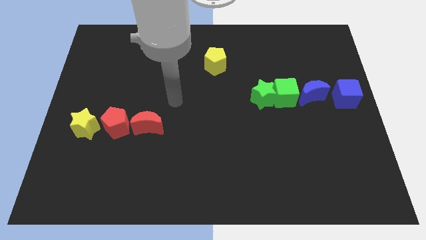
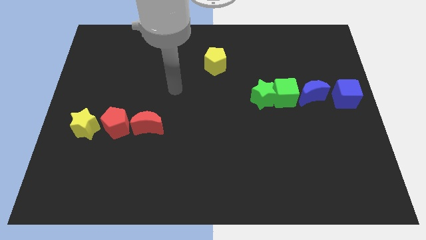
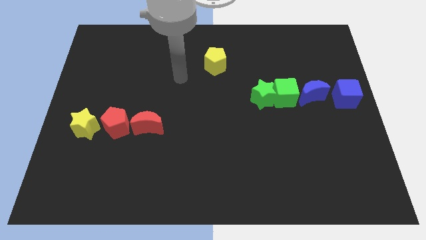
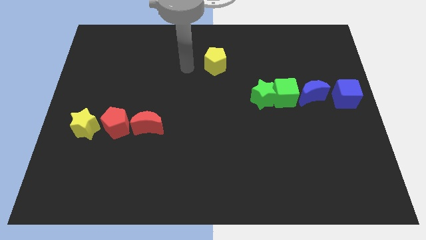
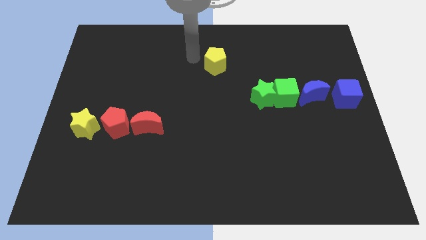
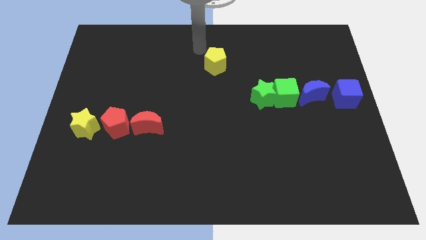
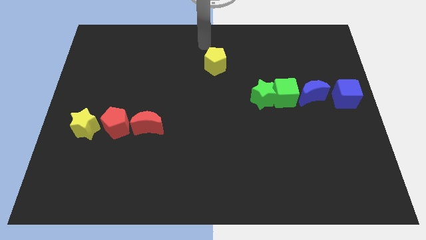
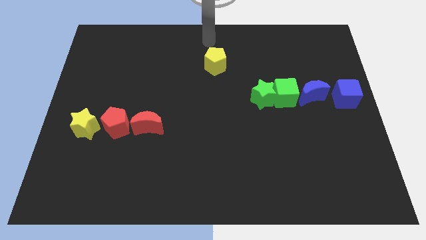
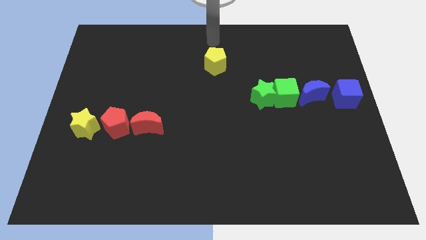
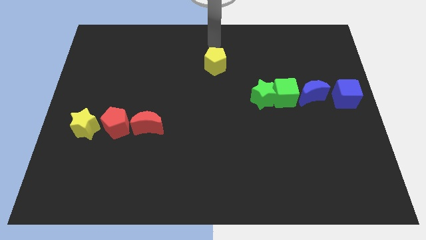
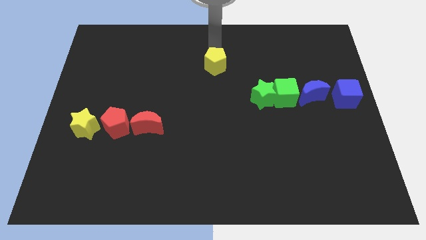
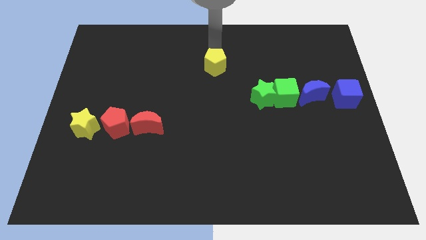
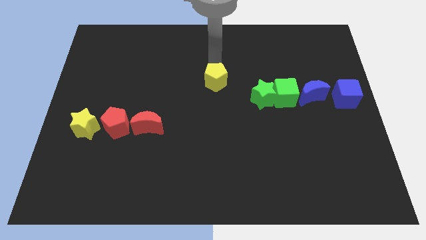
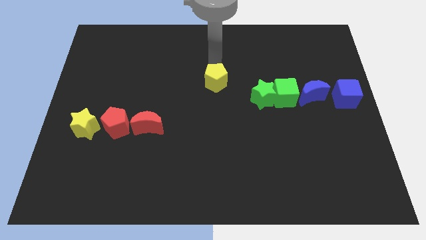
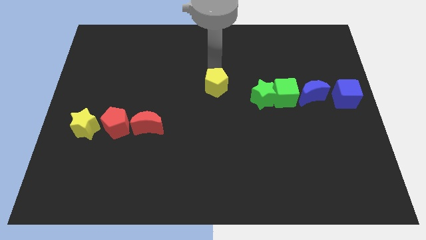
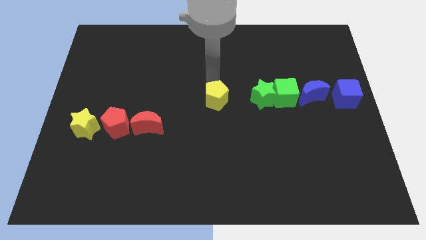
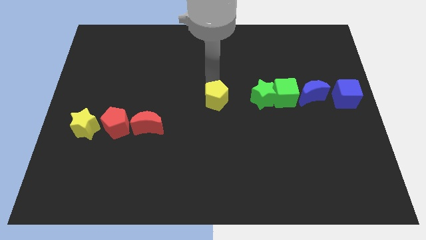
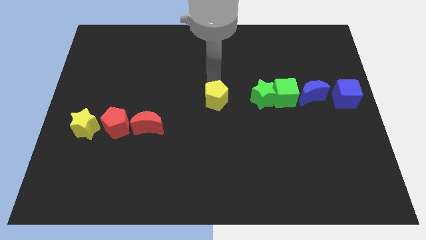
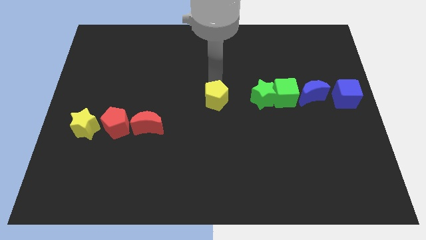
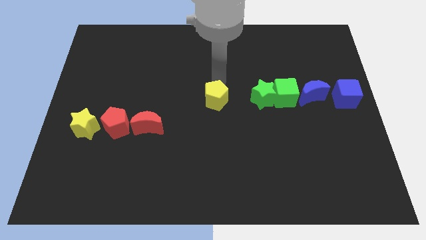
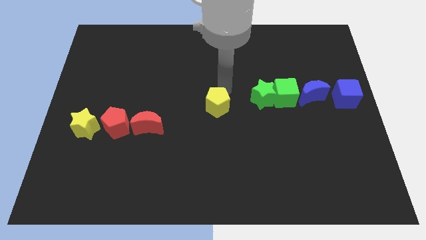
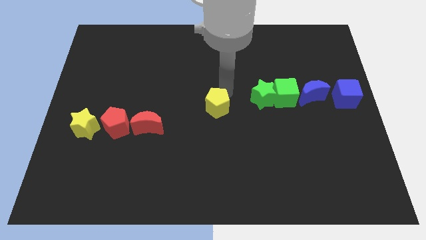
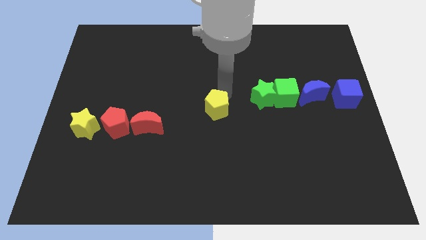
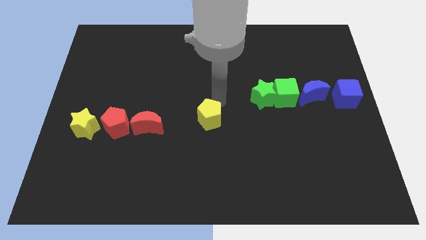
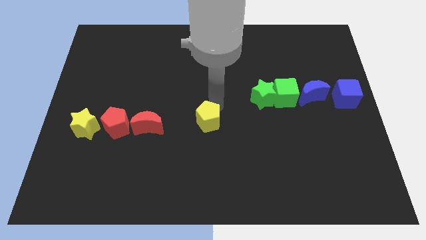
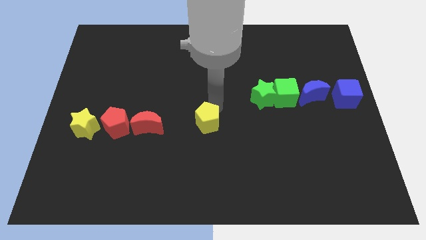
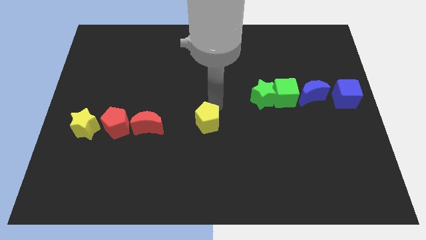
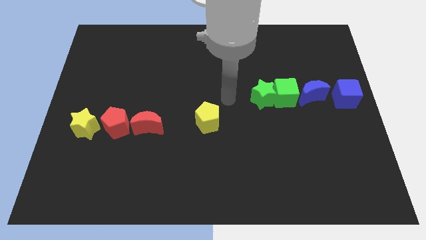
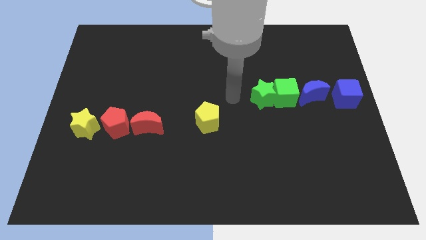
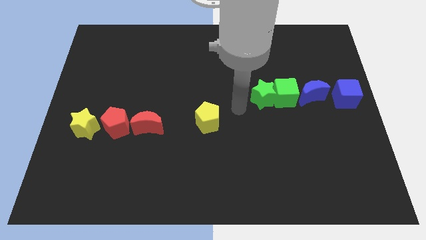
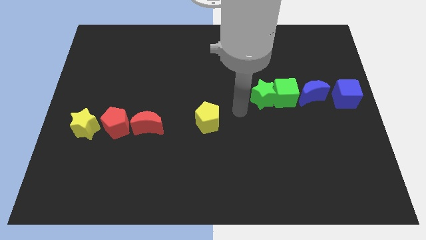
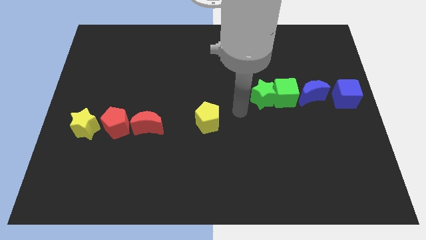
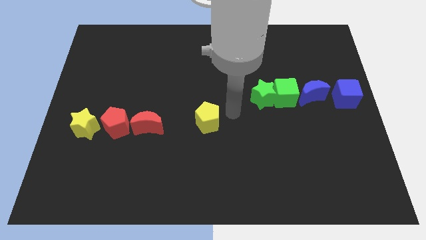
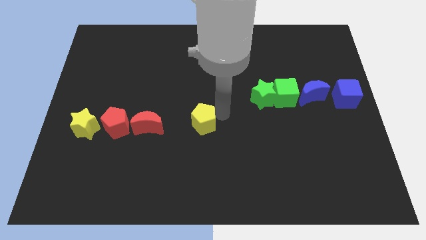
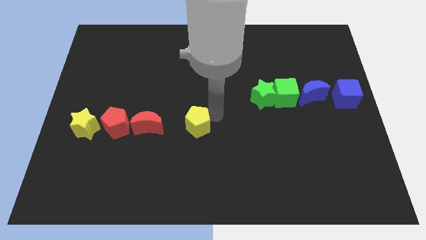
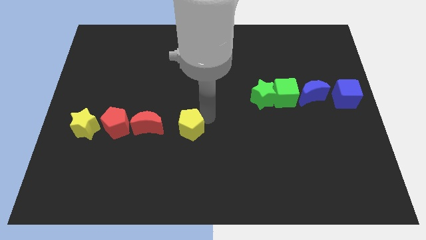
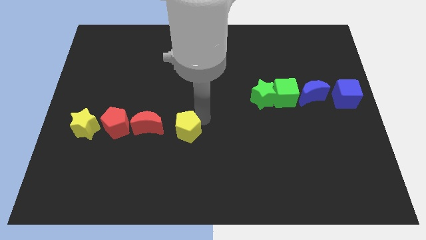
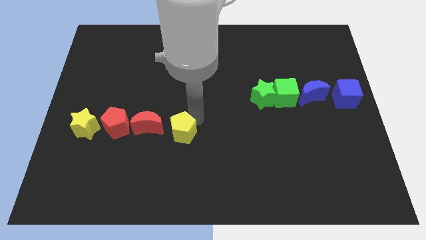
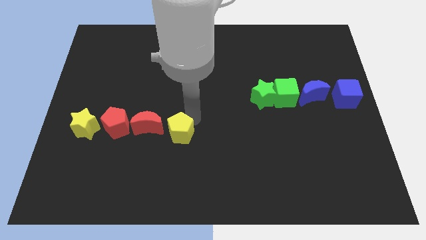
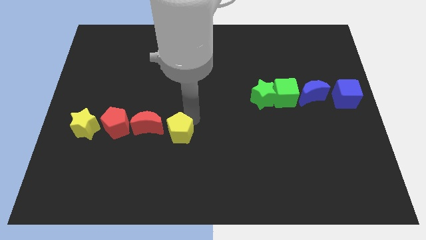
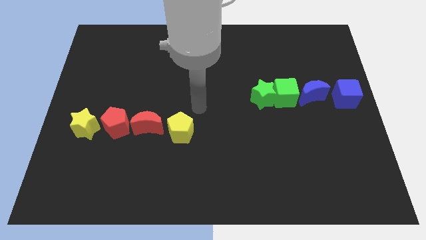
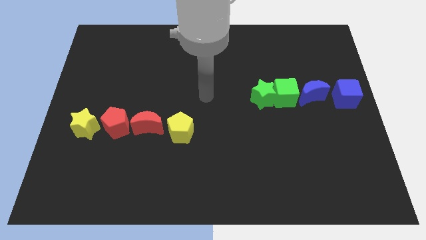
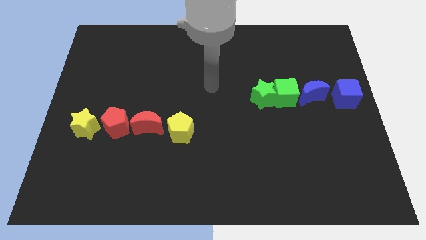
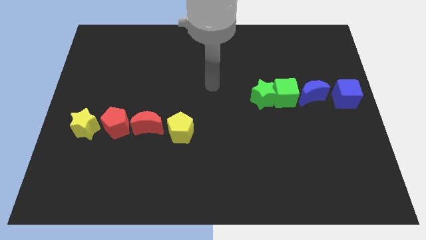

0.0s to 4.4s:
move yellow pentagon right to the red moon

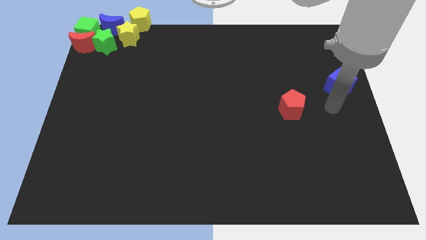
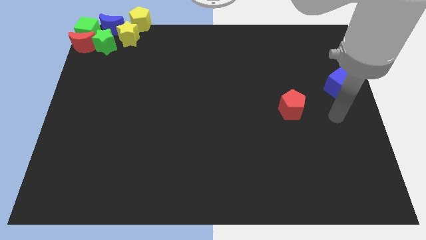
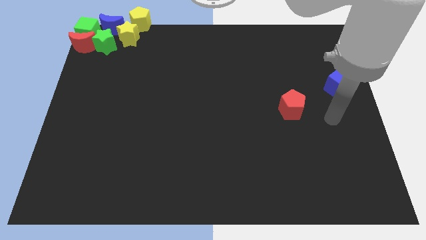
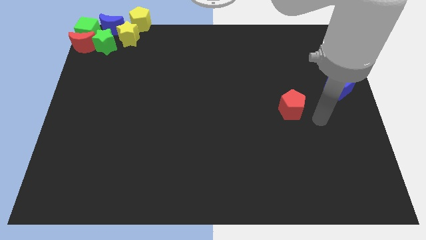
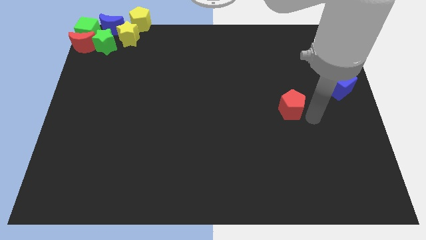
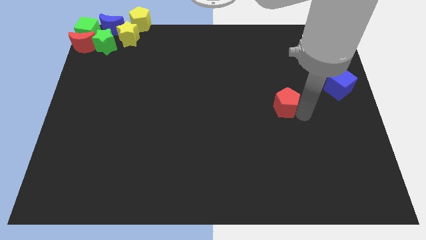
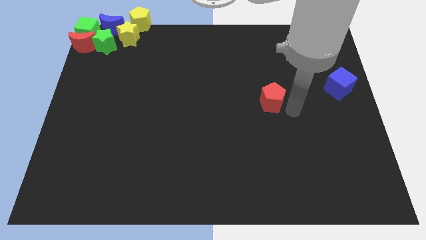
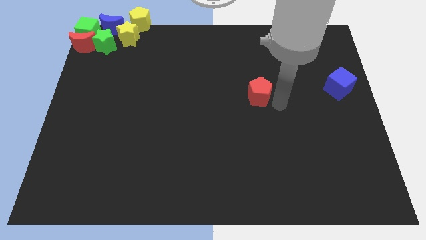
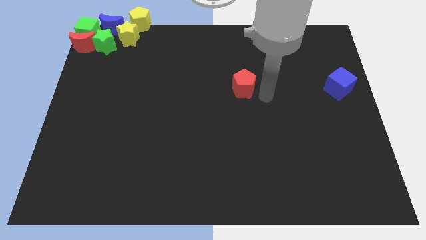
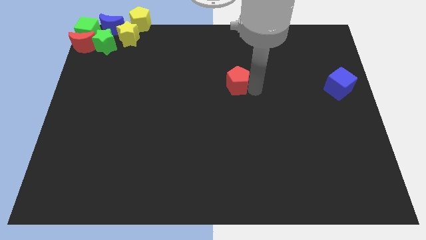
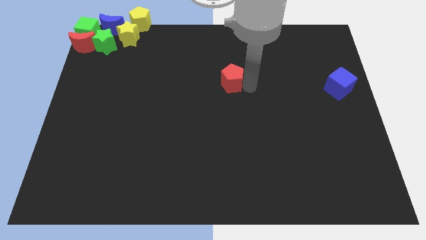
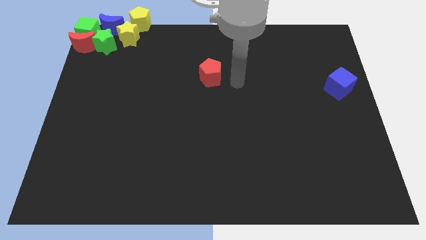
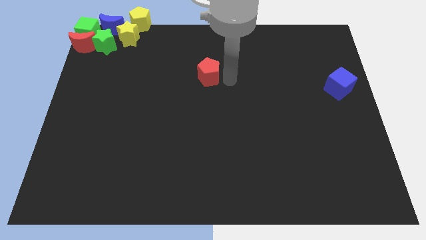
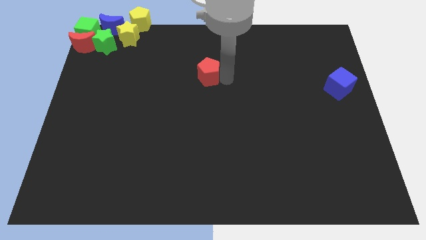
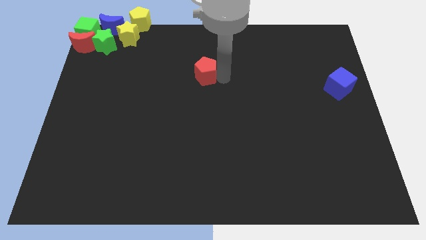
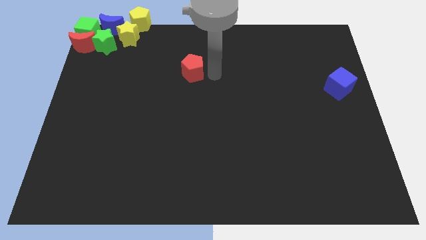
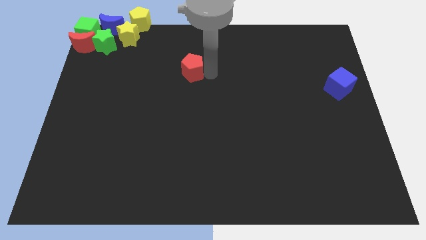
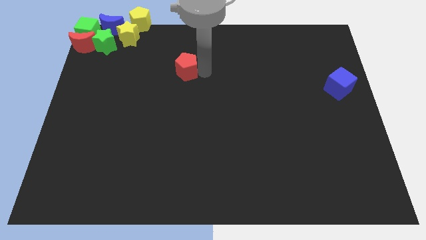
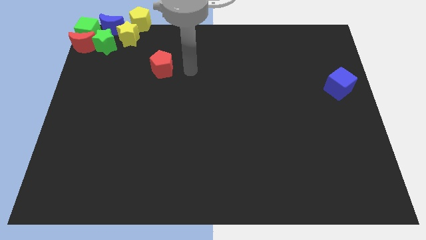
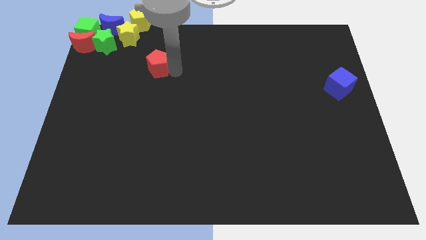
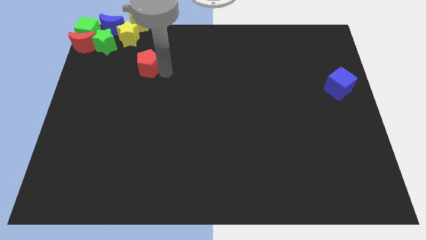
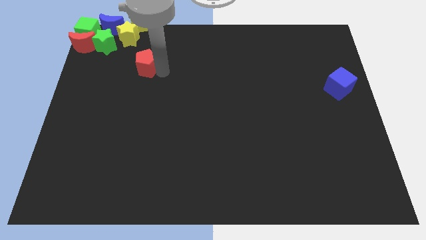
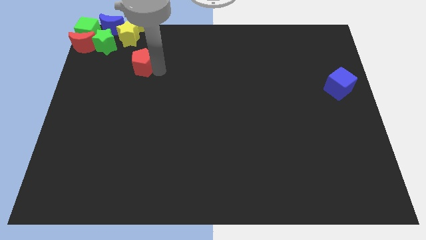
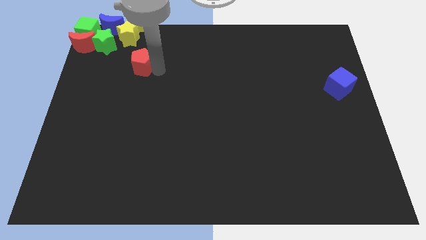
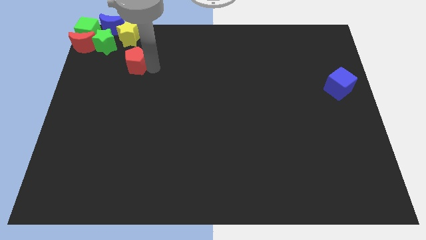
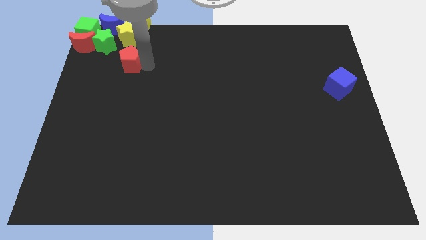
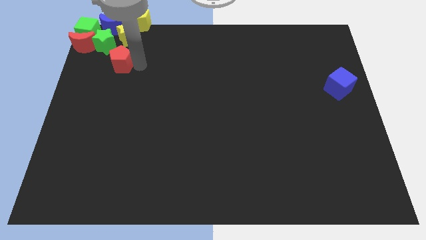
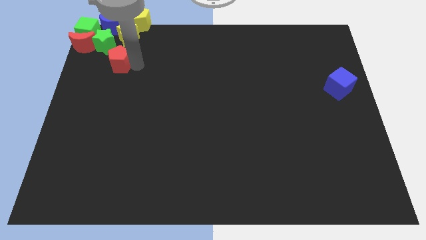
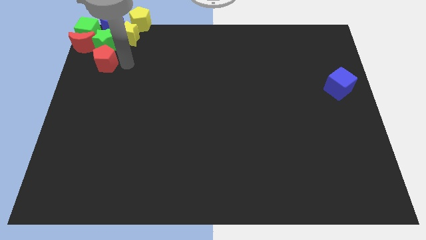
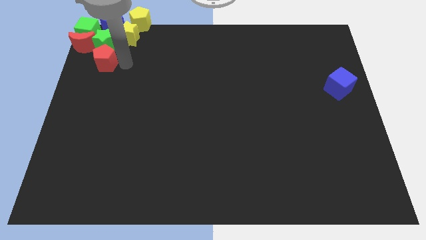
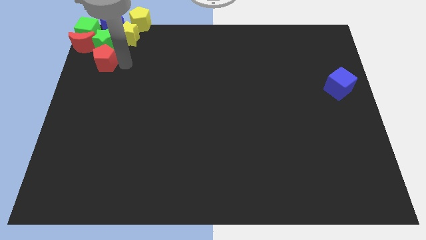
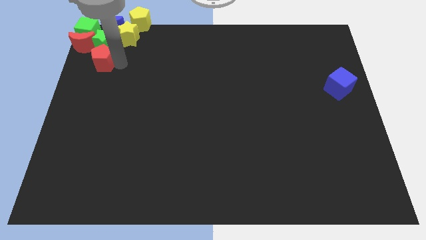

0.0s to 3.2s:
place red pentagon below green star

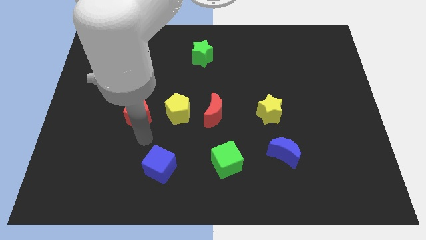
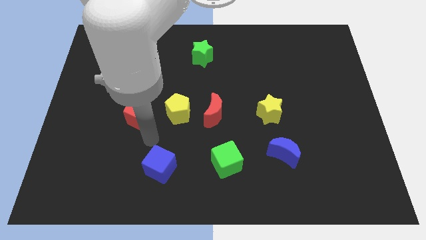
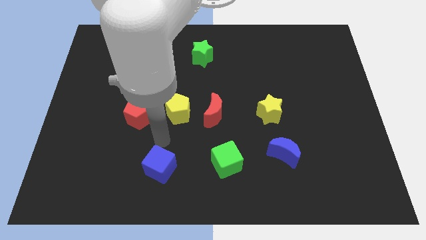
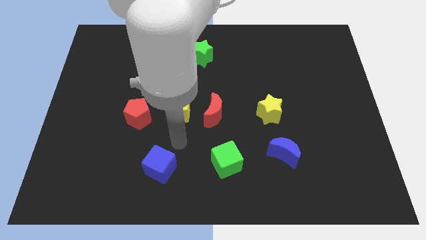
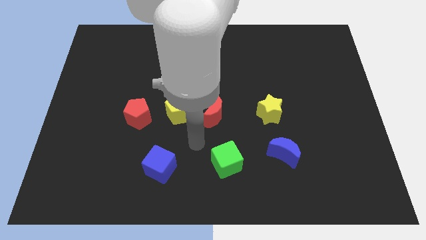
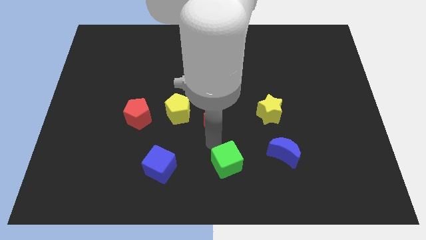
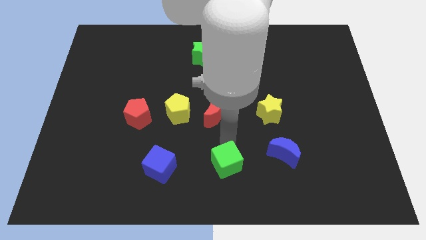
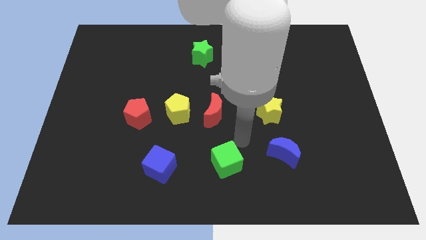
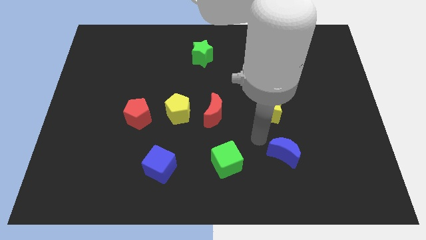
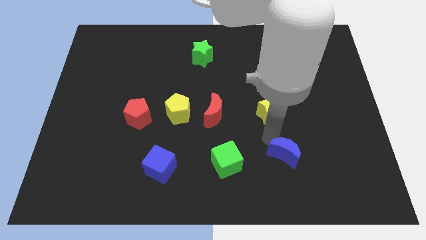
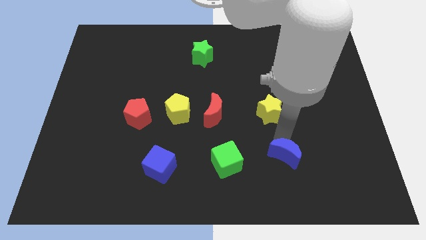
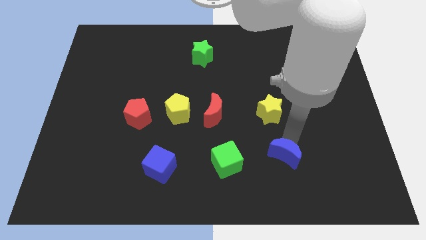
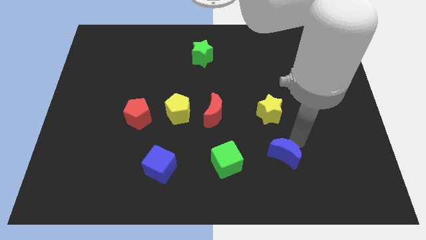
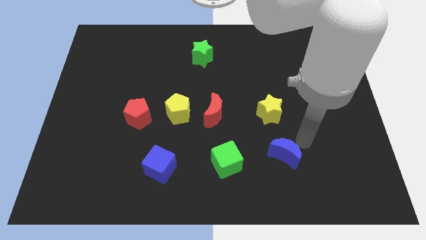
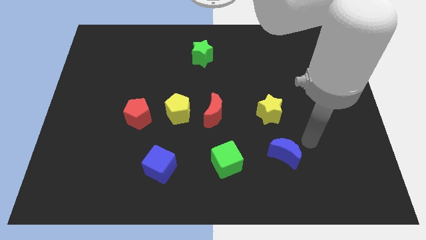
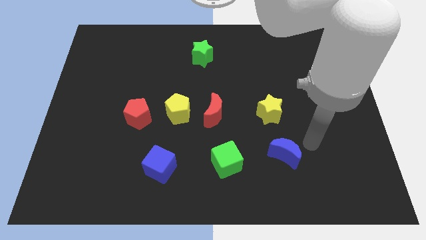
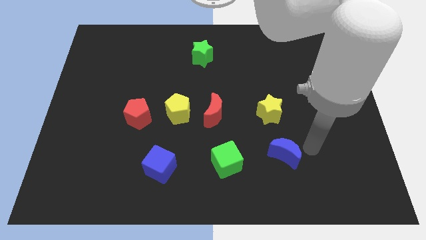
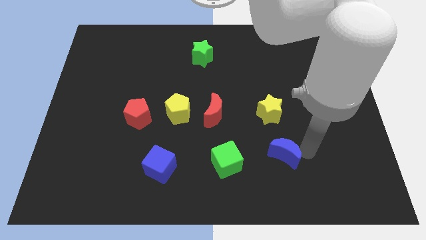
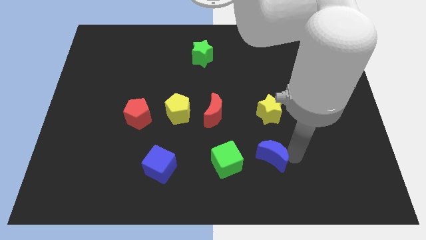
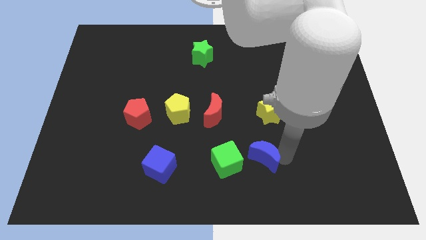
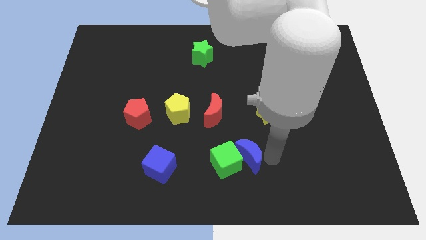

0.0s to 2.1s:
push the blue moon into the green cube
